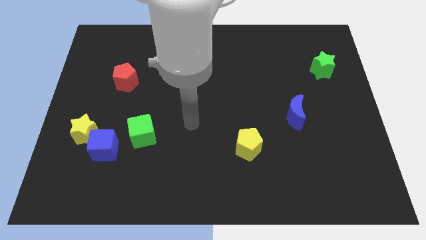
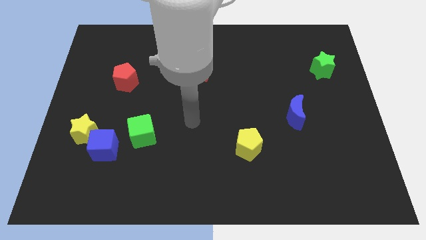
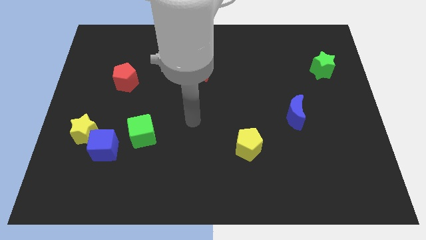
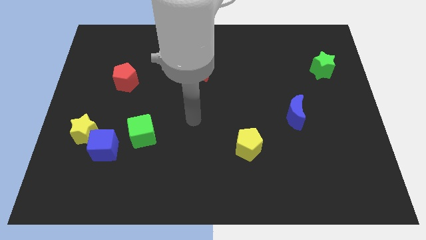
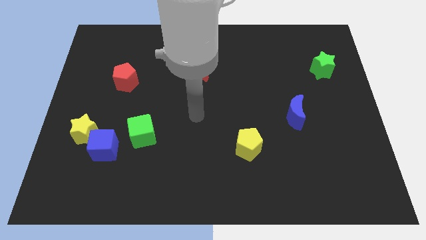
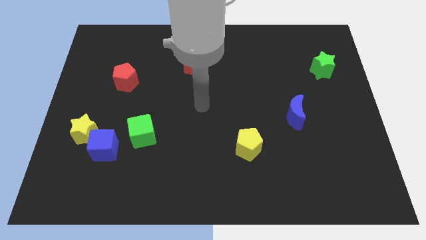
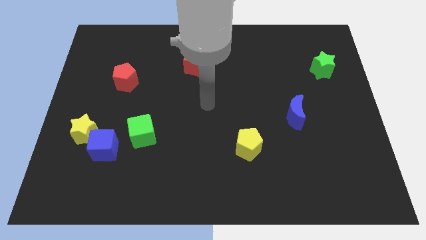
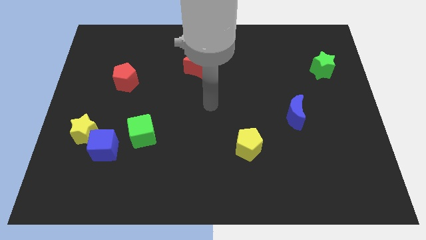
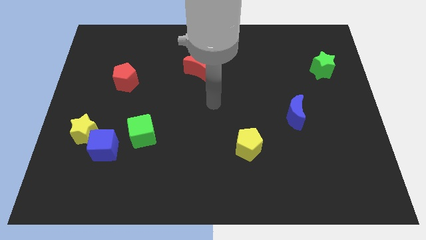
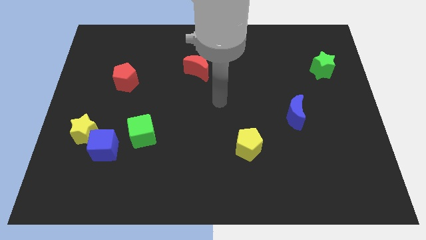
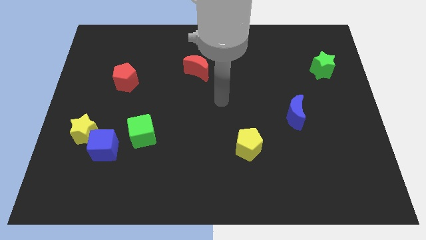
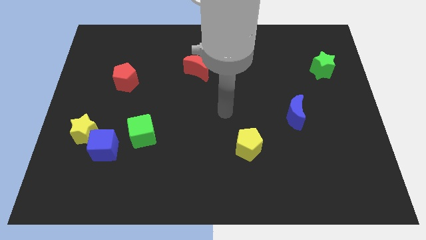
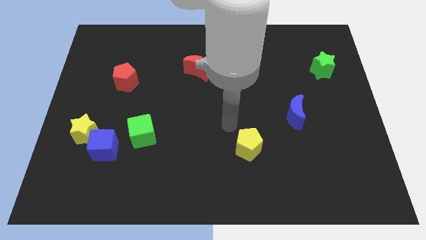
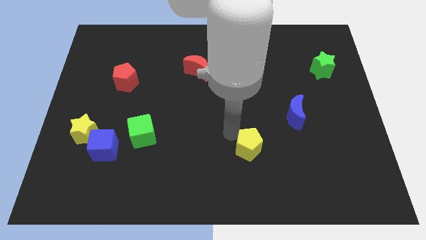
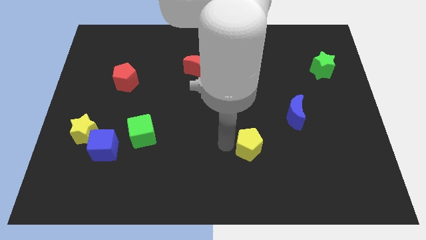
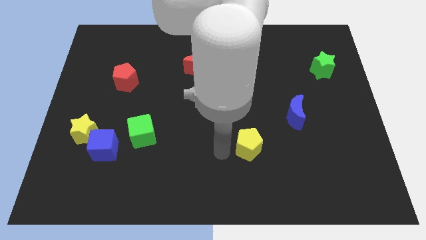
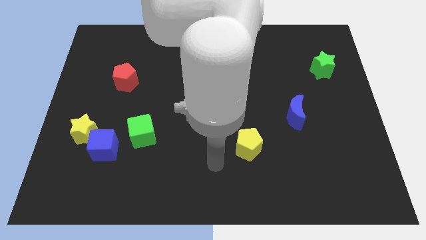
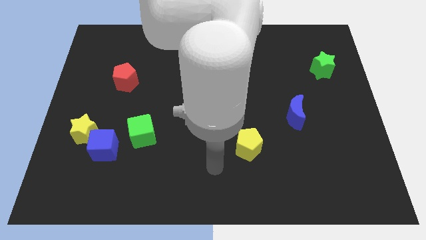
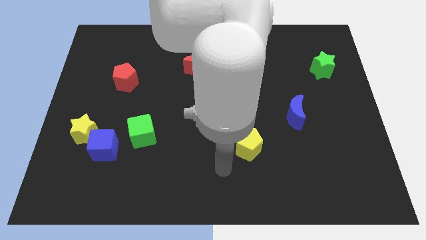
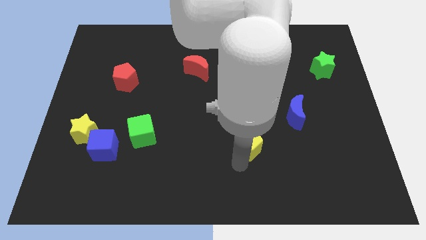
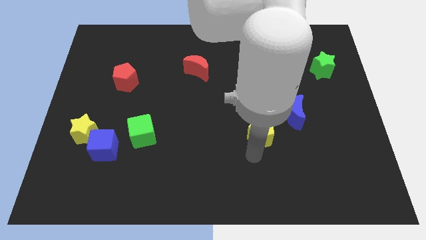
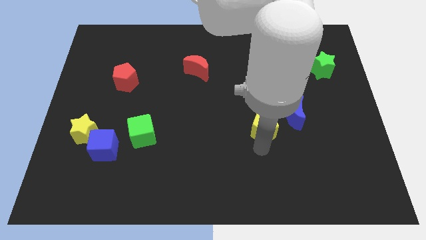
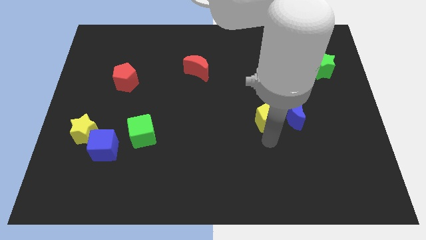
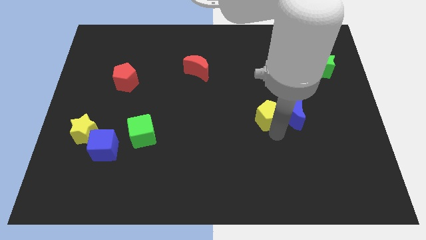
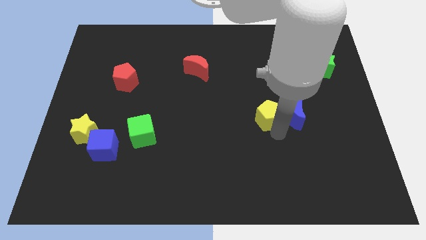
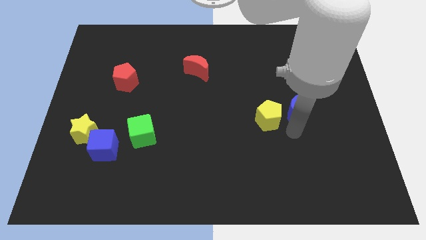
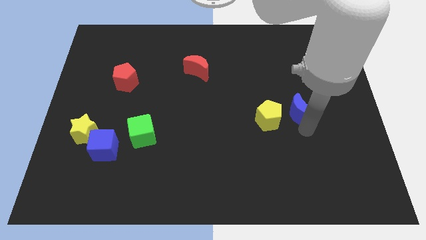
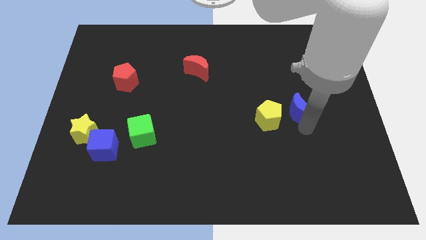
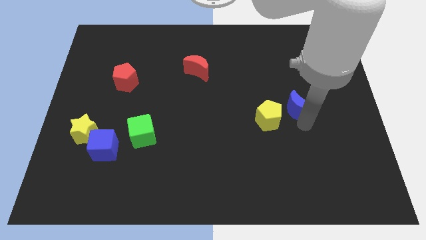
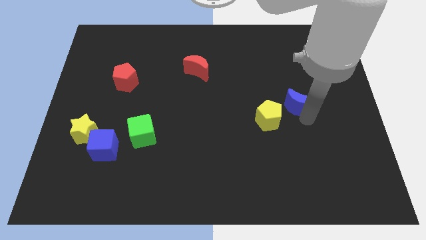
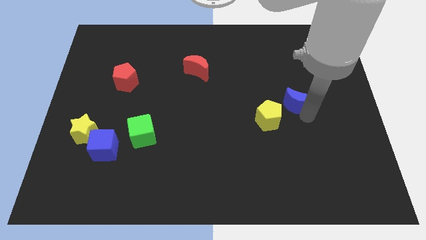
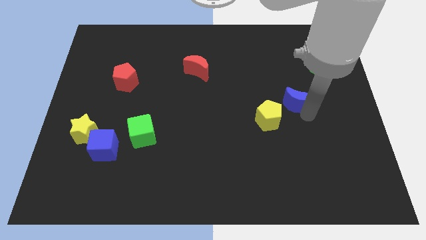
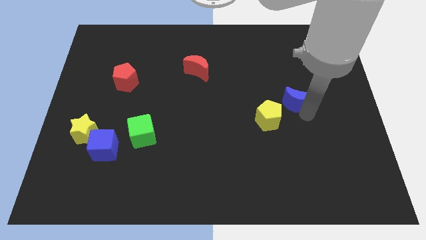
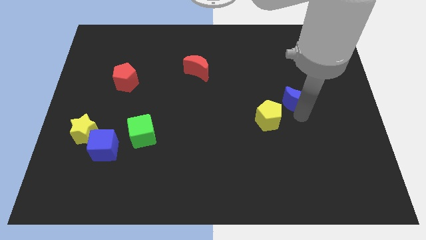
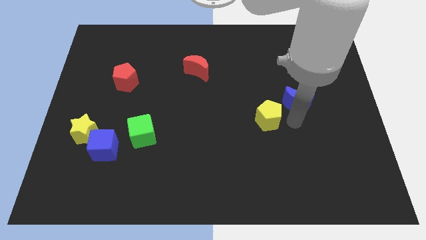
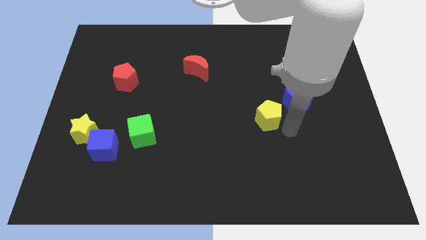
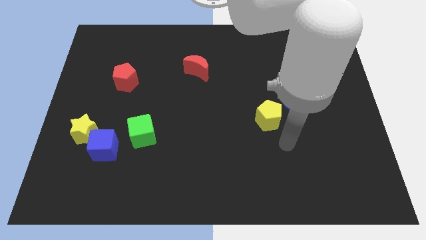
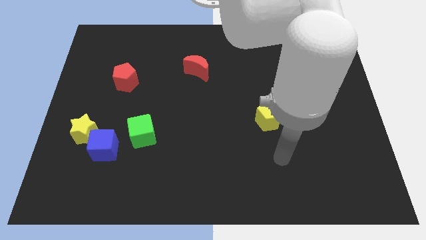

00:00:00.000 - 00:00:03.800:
go and move the yellow pentagon and the blue crescent slightly to the top

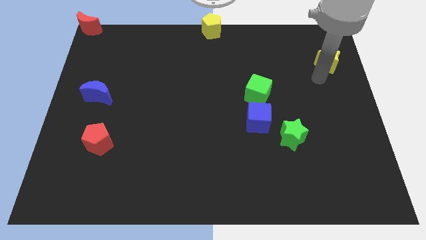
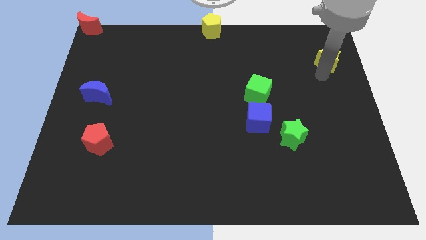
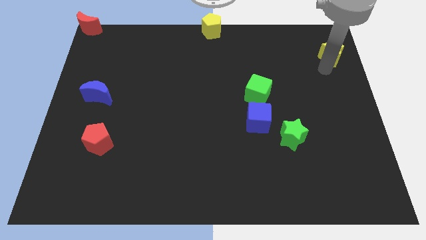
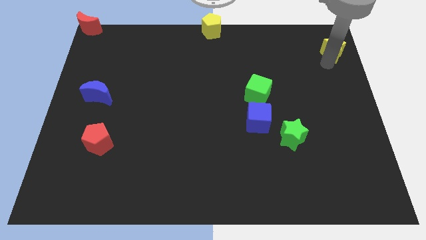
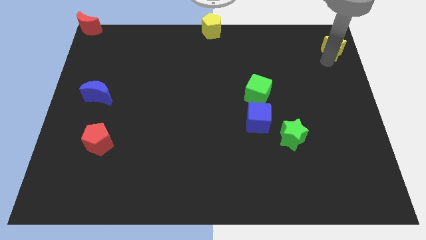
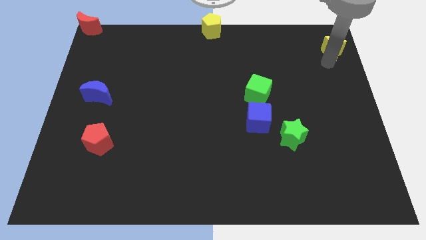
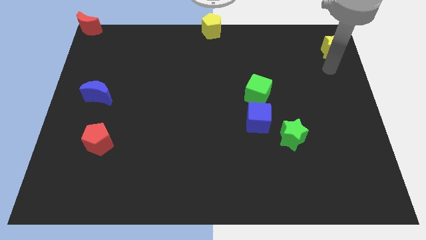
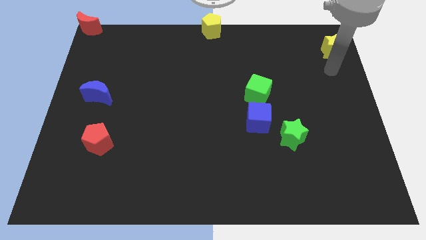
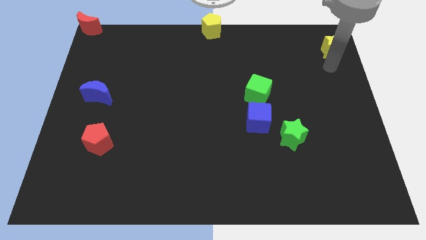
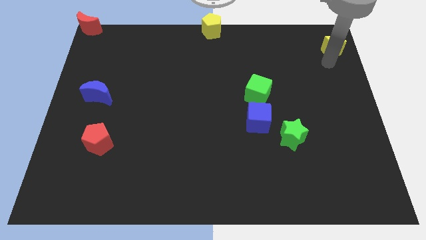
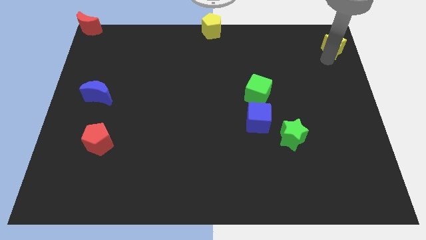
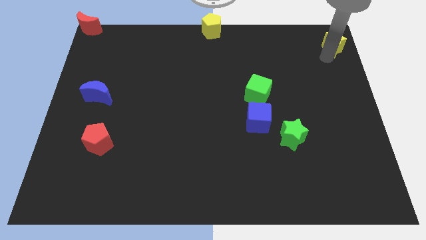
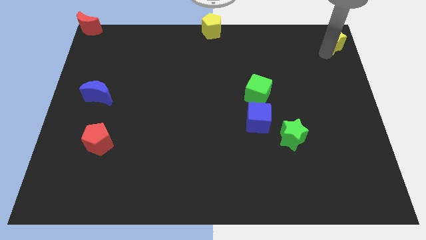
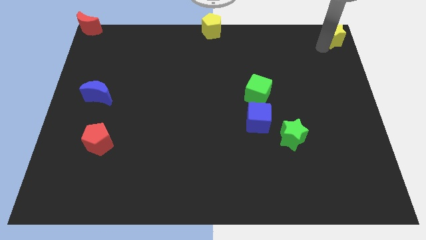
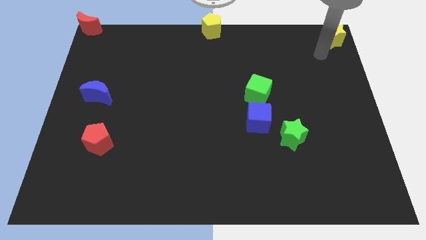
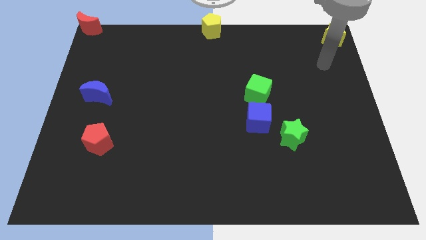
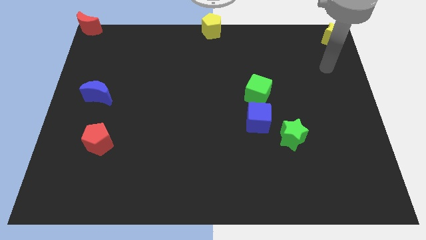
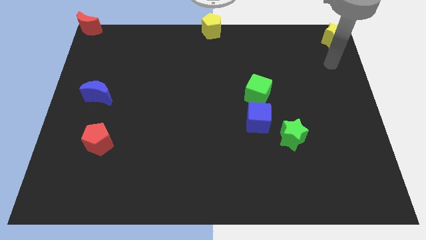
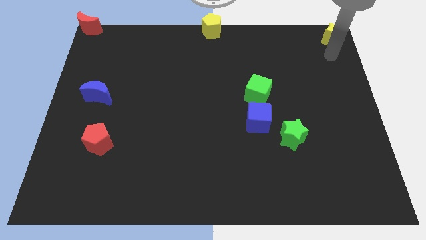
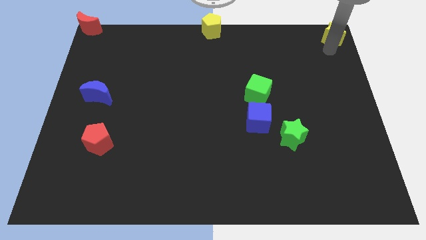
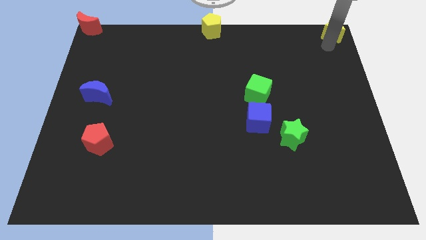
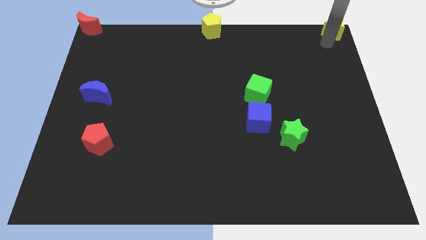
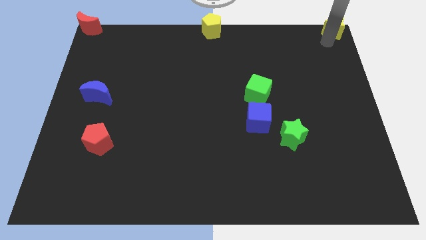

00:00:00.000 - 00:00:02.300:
move the yellow star to the top right corner

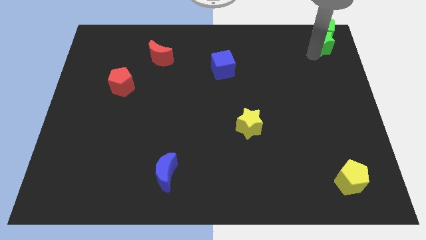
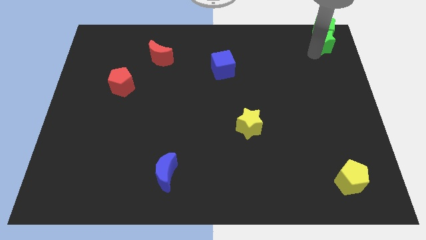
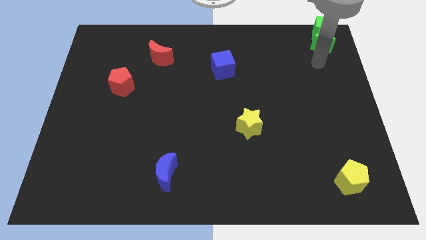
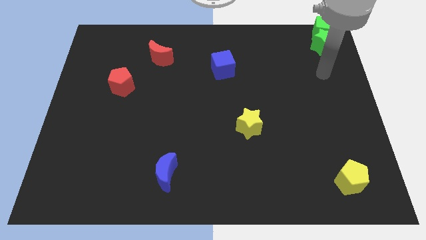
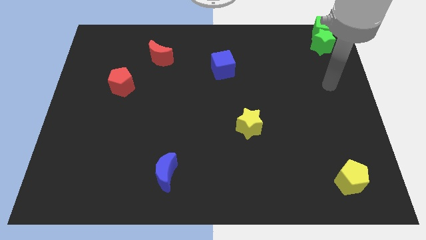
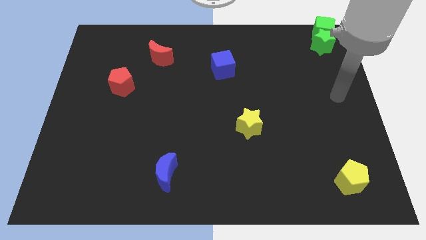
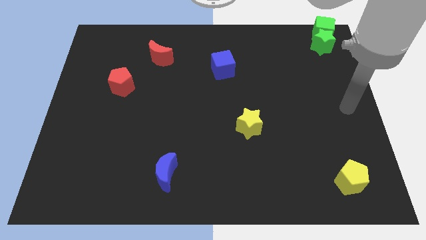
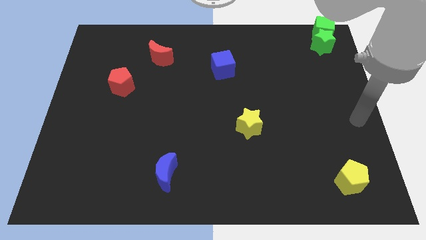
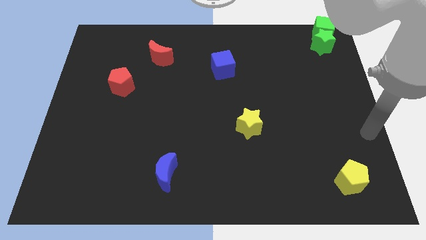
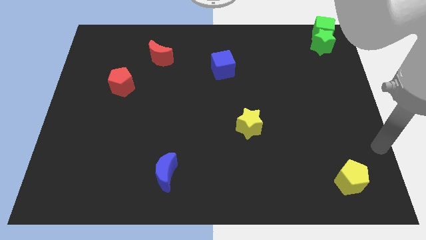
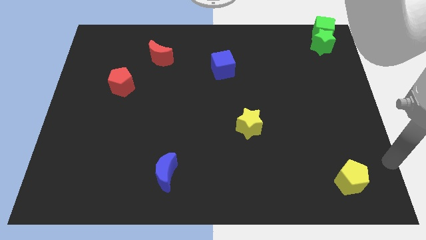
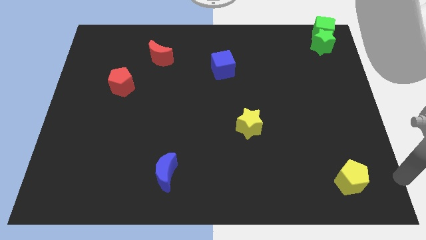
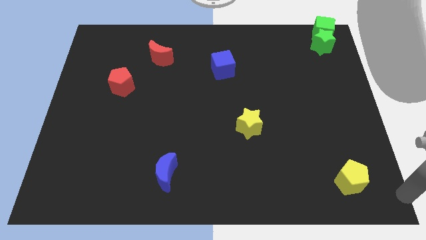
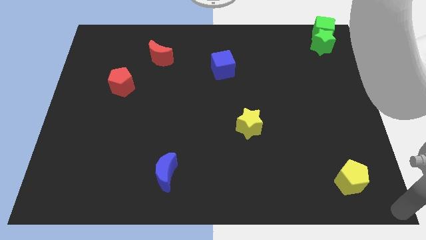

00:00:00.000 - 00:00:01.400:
put your arm away from the green blocks

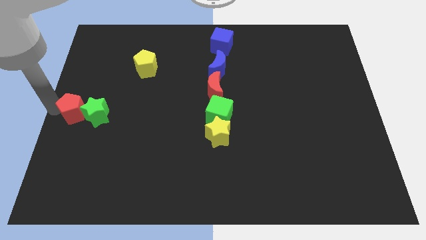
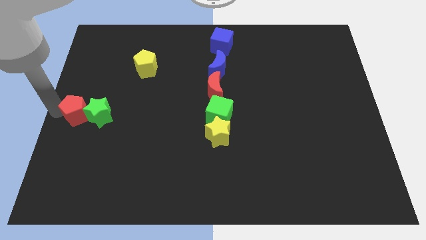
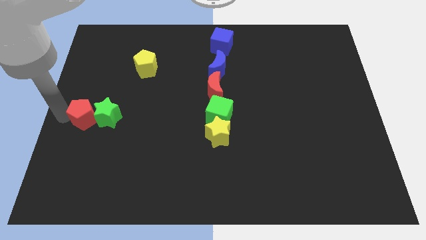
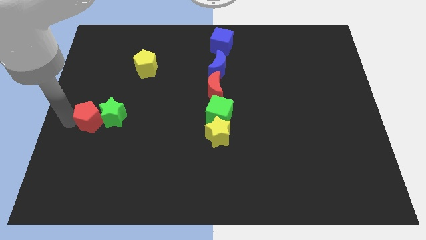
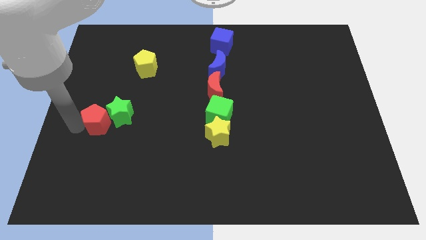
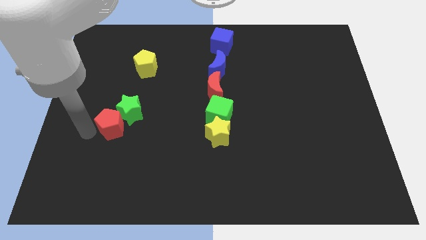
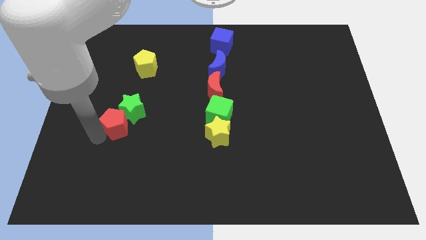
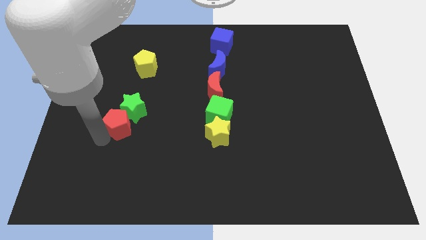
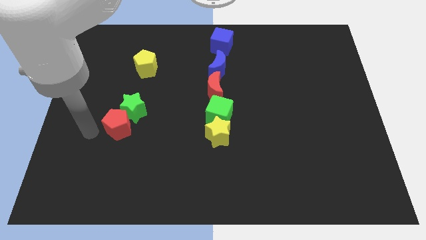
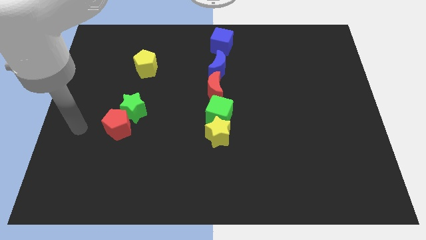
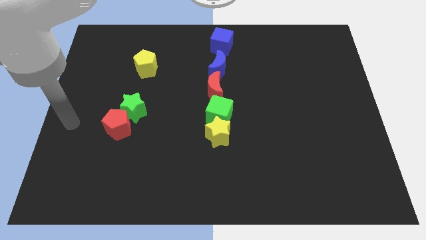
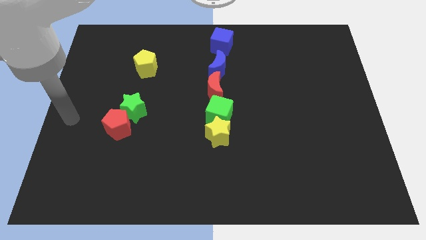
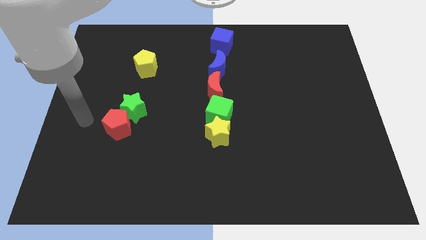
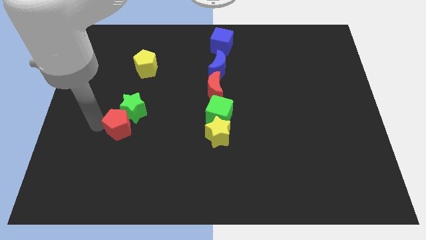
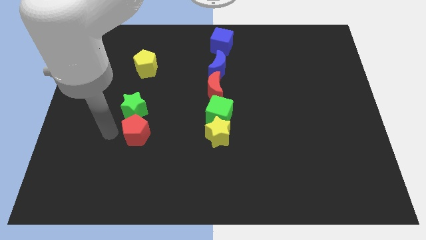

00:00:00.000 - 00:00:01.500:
push red pentagon below green star

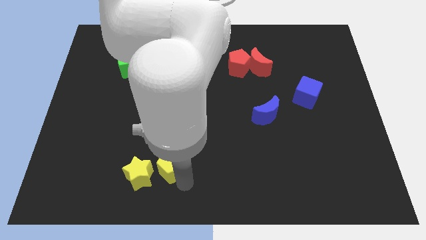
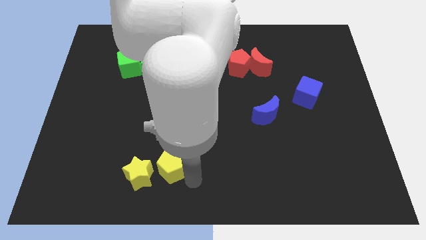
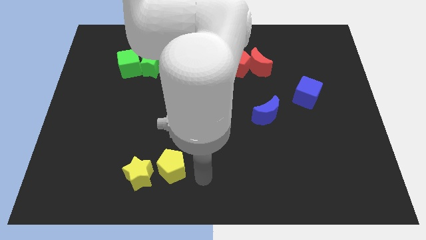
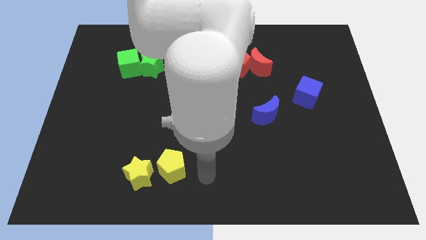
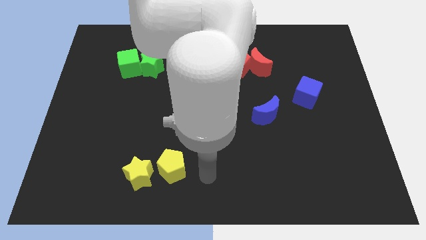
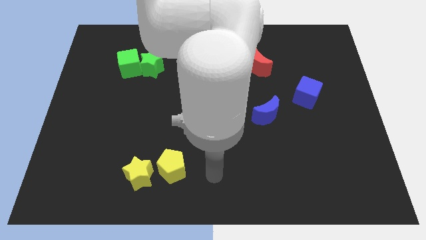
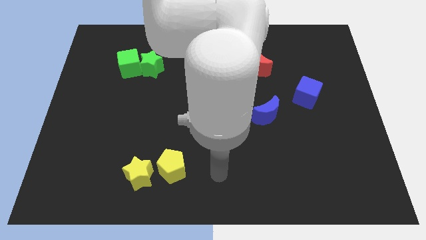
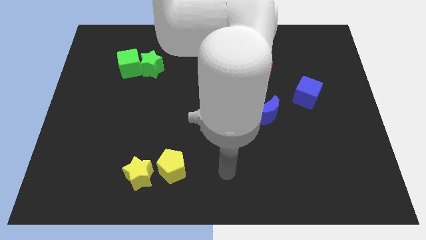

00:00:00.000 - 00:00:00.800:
move your arm away from yellow pentagon
